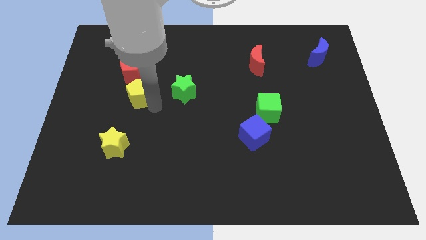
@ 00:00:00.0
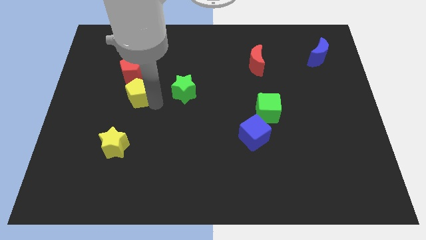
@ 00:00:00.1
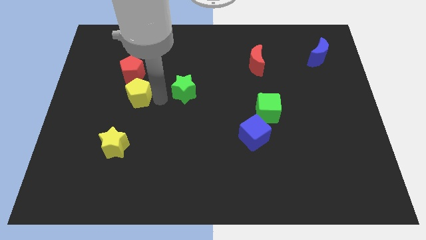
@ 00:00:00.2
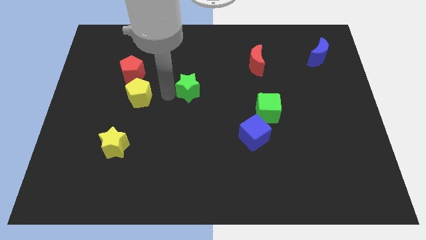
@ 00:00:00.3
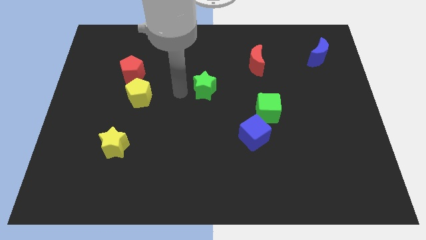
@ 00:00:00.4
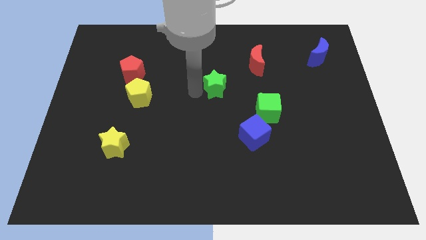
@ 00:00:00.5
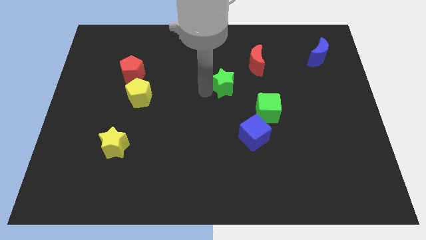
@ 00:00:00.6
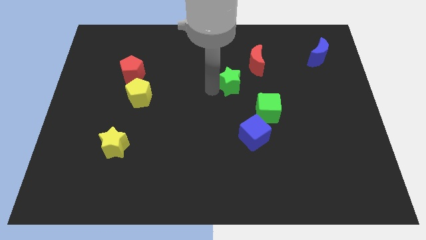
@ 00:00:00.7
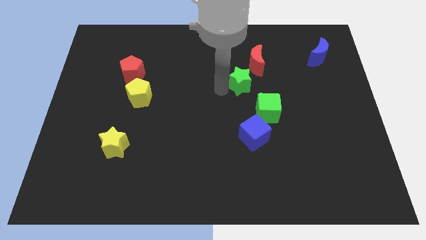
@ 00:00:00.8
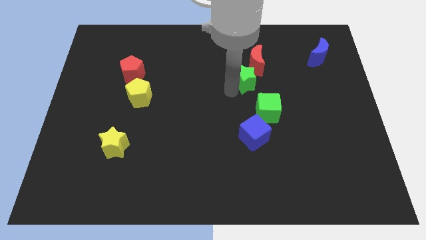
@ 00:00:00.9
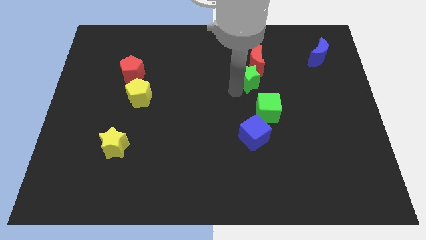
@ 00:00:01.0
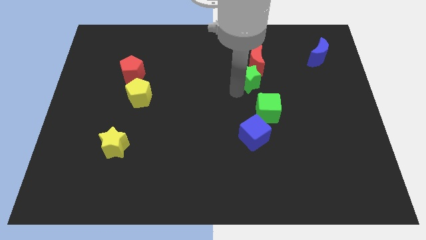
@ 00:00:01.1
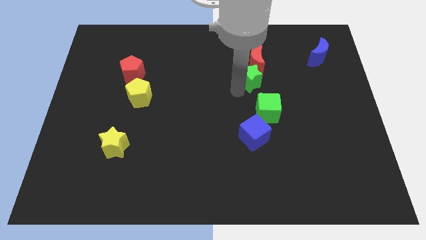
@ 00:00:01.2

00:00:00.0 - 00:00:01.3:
slide the green star into the red moon

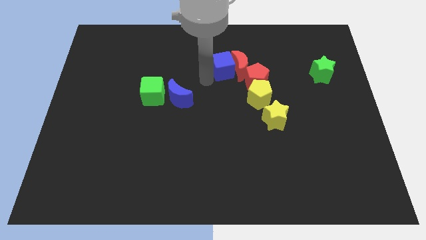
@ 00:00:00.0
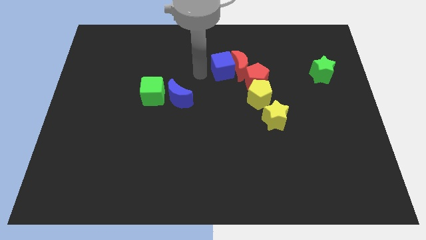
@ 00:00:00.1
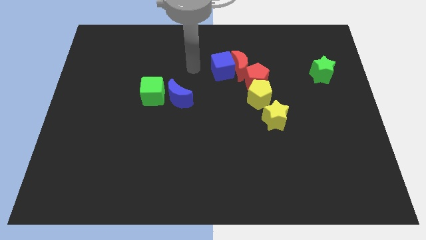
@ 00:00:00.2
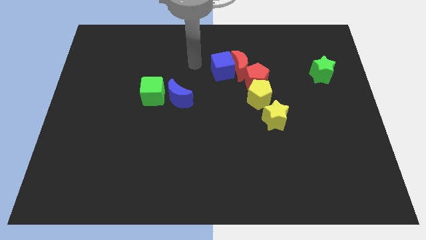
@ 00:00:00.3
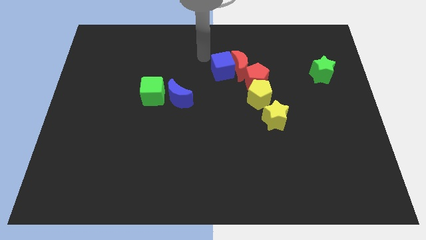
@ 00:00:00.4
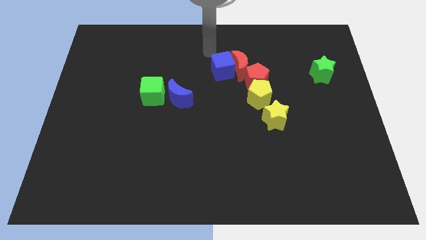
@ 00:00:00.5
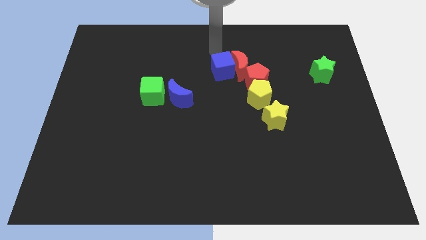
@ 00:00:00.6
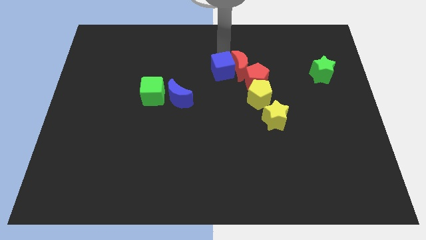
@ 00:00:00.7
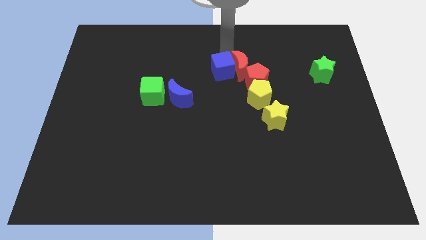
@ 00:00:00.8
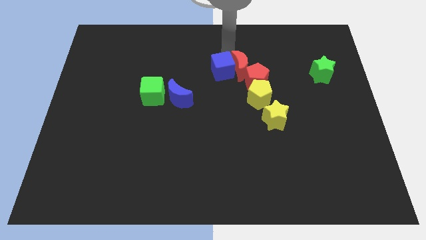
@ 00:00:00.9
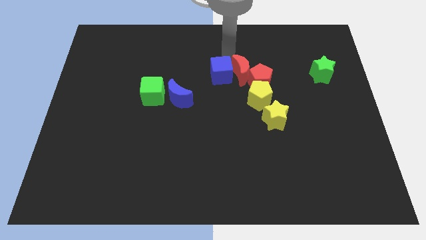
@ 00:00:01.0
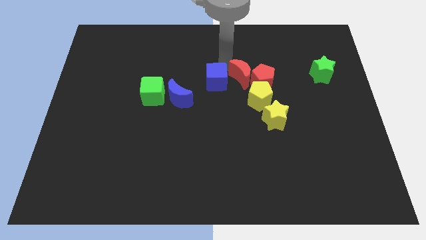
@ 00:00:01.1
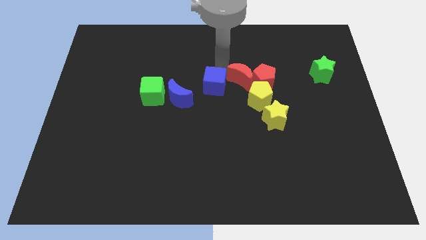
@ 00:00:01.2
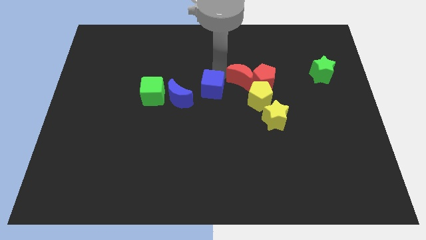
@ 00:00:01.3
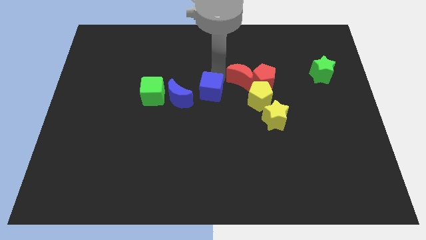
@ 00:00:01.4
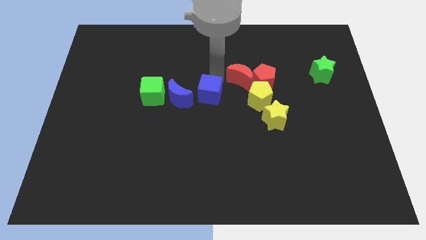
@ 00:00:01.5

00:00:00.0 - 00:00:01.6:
separate the blue cube from the red moon

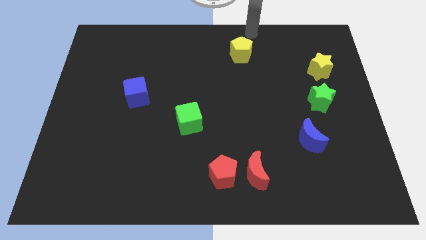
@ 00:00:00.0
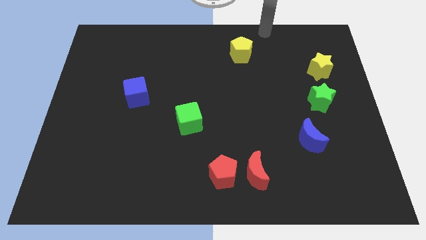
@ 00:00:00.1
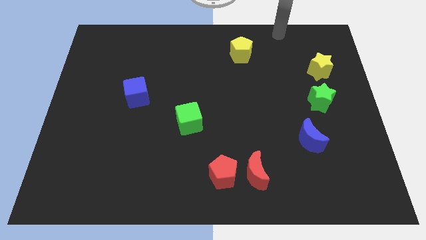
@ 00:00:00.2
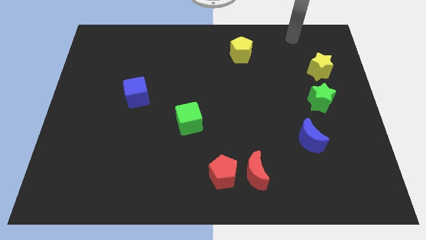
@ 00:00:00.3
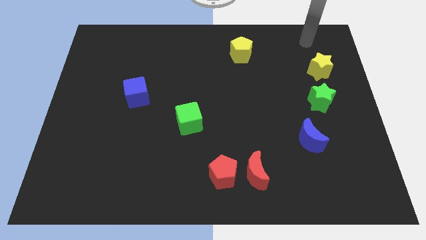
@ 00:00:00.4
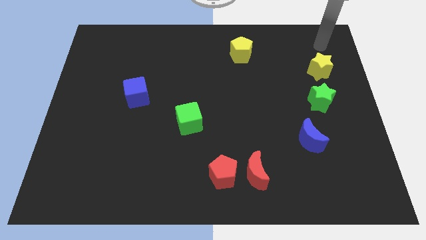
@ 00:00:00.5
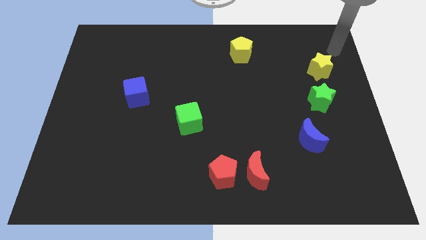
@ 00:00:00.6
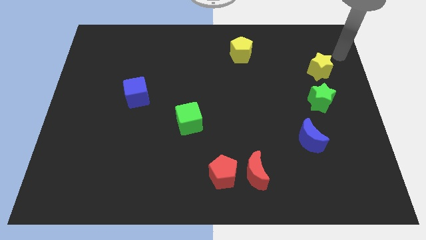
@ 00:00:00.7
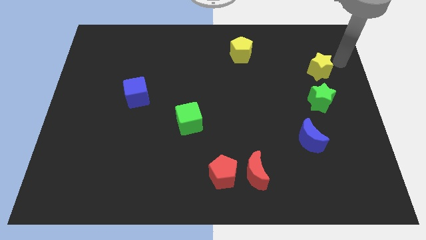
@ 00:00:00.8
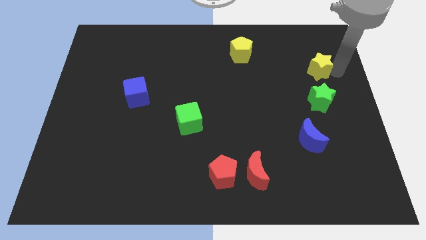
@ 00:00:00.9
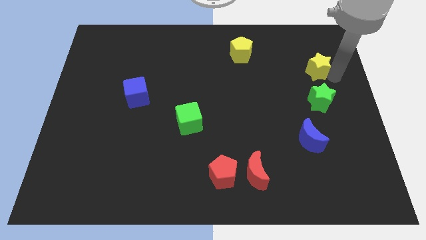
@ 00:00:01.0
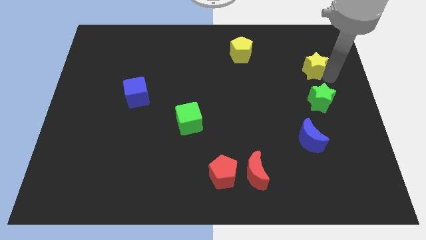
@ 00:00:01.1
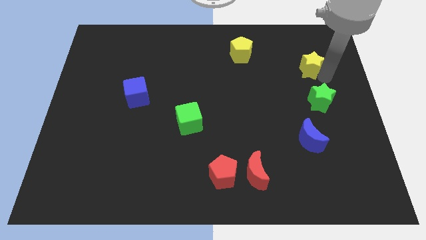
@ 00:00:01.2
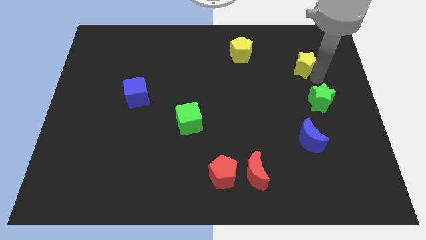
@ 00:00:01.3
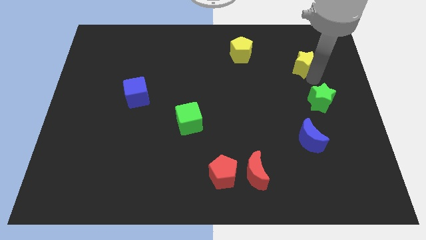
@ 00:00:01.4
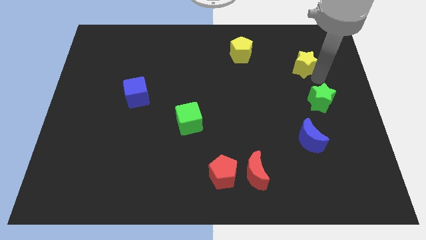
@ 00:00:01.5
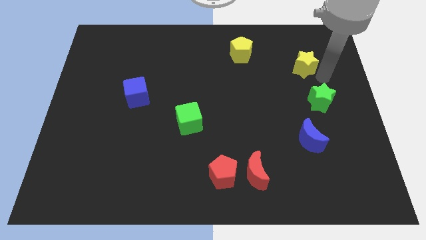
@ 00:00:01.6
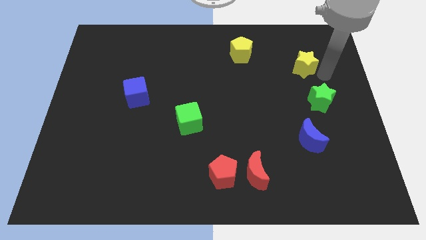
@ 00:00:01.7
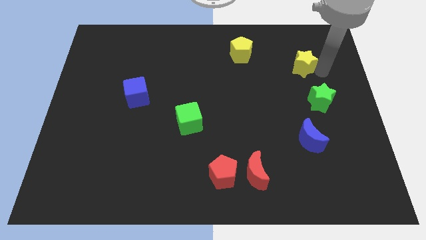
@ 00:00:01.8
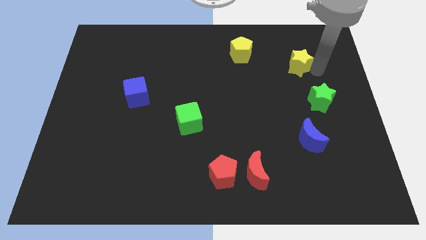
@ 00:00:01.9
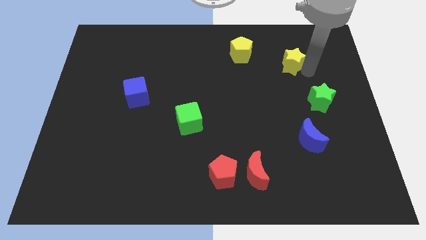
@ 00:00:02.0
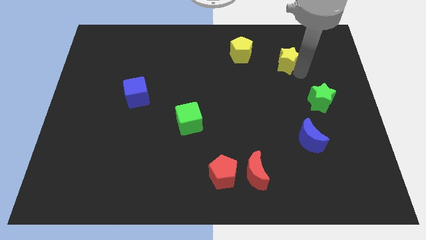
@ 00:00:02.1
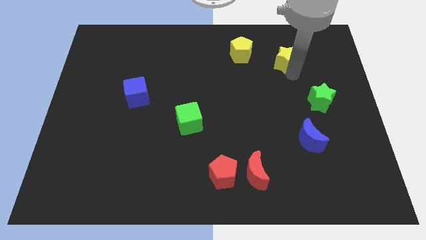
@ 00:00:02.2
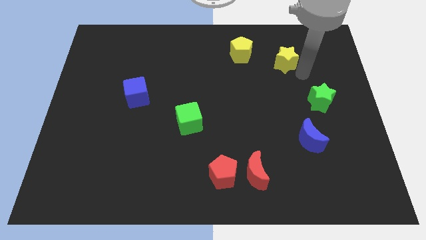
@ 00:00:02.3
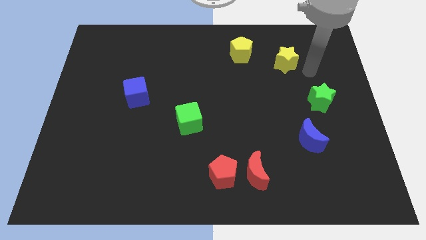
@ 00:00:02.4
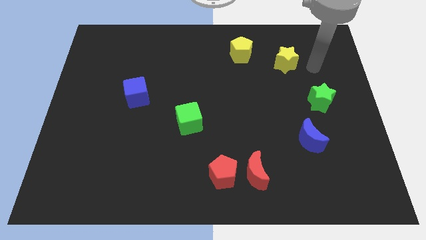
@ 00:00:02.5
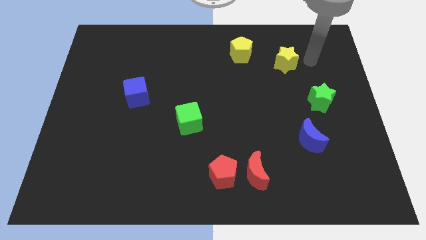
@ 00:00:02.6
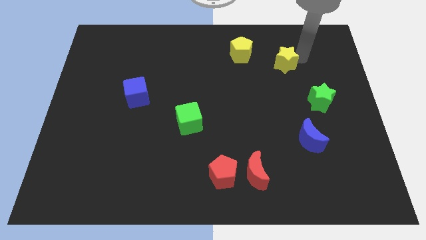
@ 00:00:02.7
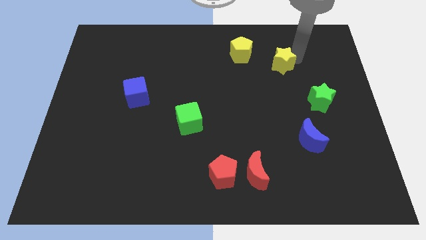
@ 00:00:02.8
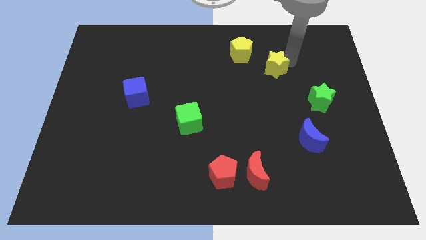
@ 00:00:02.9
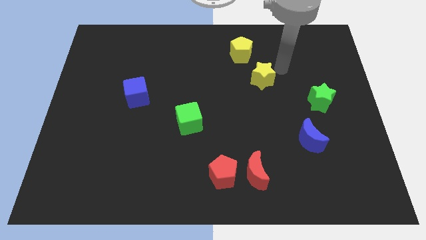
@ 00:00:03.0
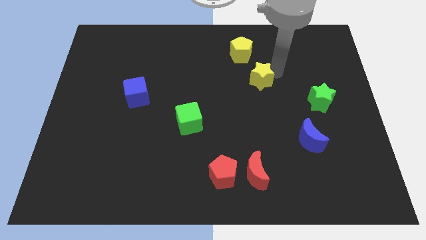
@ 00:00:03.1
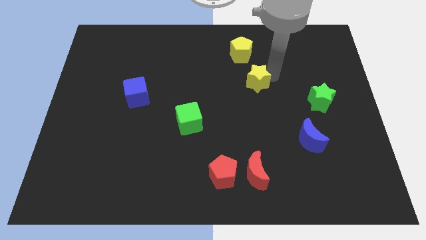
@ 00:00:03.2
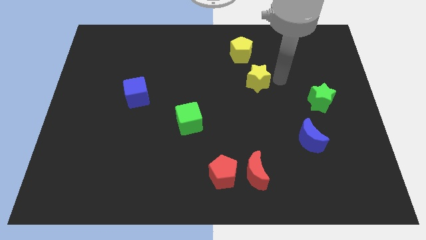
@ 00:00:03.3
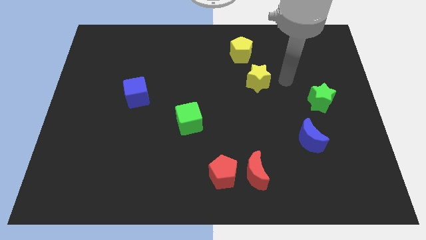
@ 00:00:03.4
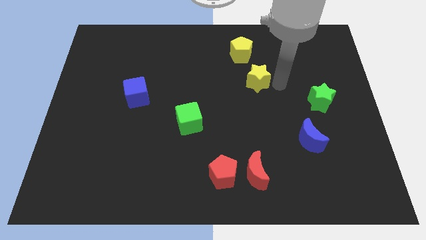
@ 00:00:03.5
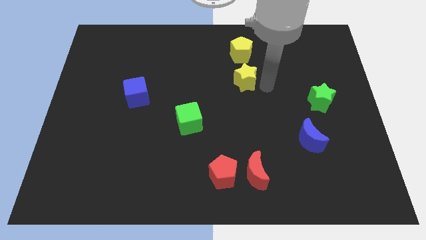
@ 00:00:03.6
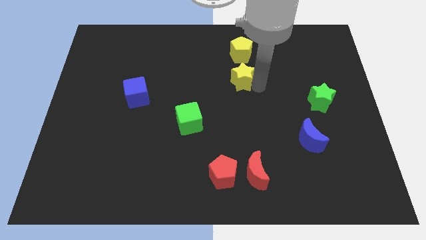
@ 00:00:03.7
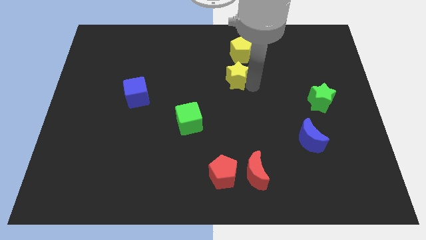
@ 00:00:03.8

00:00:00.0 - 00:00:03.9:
place the yellow star below the yellow pentagon

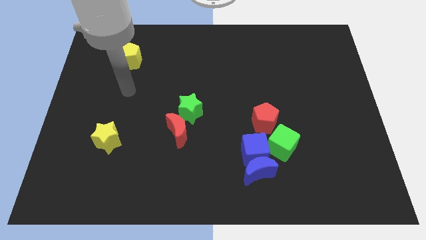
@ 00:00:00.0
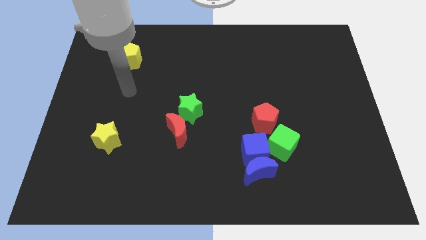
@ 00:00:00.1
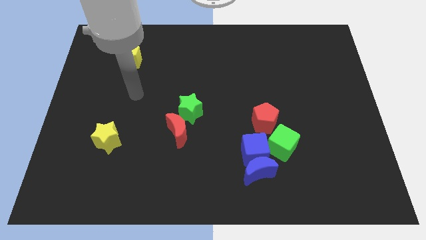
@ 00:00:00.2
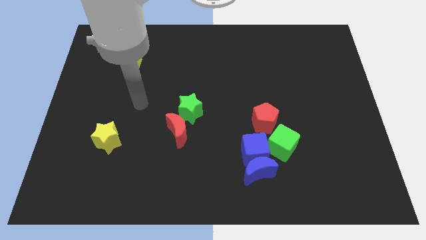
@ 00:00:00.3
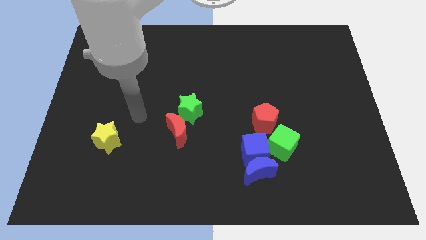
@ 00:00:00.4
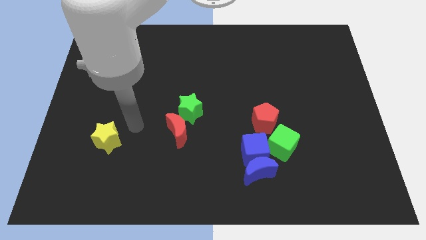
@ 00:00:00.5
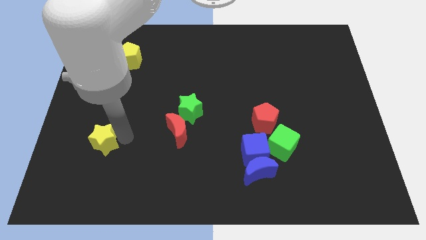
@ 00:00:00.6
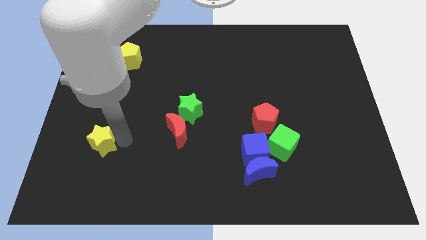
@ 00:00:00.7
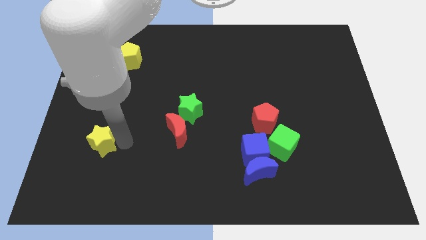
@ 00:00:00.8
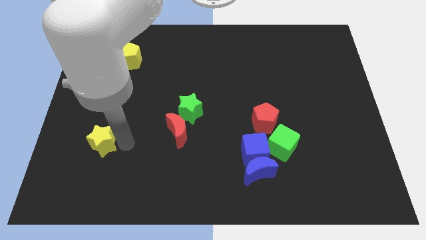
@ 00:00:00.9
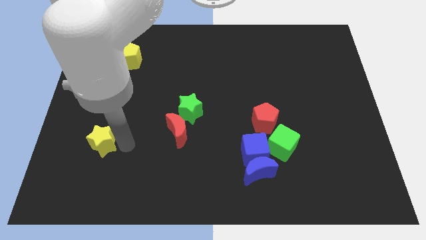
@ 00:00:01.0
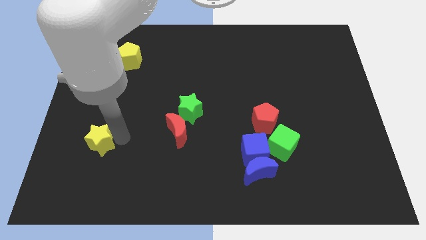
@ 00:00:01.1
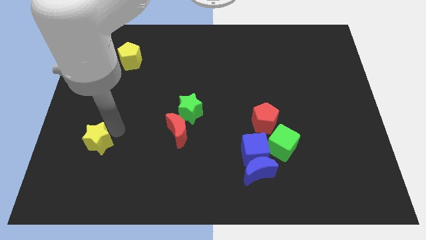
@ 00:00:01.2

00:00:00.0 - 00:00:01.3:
slightly move the yellow star to the left of the board

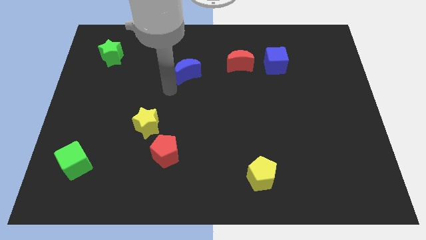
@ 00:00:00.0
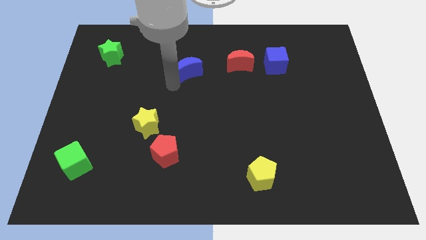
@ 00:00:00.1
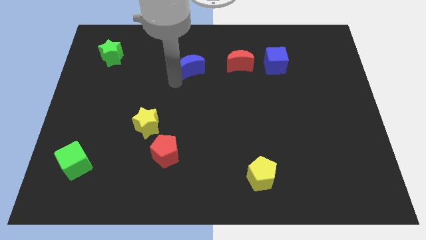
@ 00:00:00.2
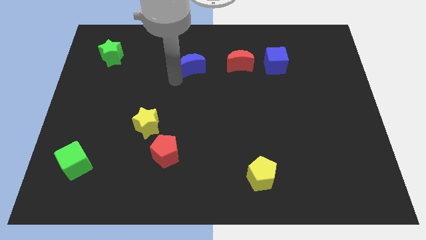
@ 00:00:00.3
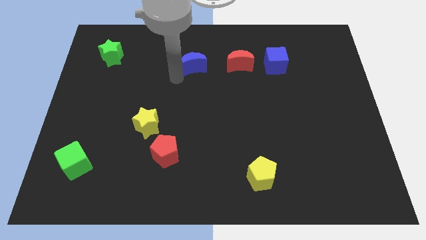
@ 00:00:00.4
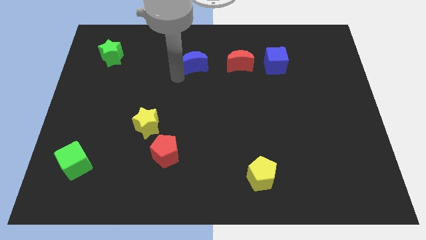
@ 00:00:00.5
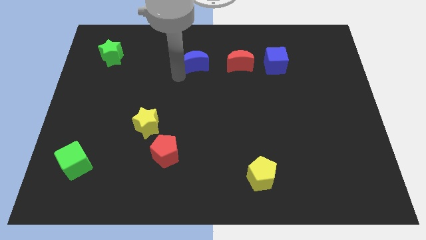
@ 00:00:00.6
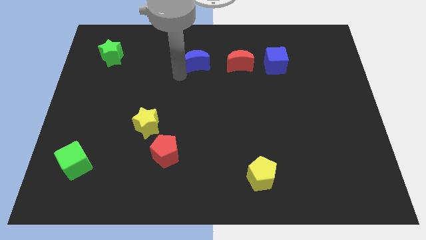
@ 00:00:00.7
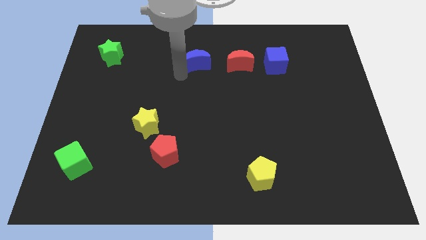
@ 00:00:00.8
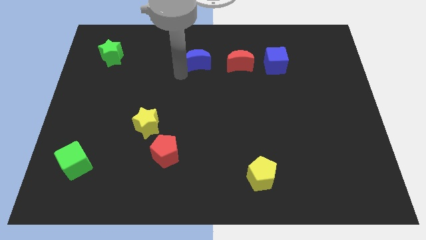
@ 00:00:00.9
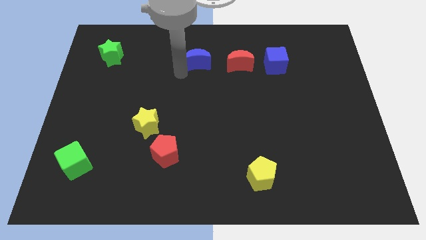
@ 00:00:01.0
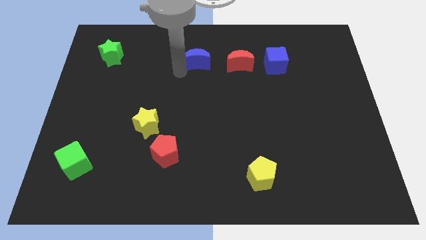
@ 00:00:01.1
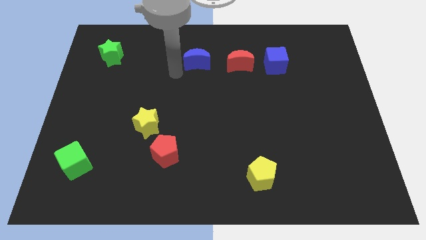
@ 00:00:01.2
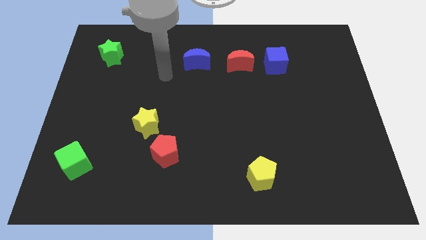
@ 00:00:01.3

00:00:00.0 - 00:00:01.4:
place the blue crescent to the left of the red crescent
